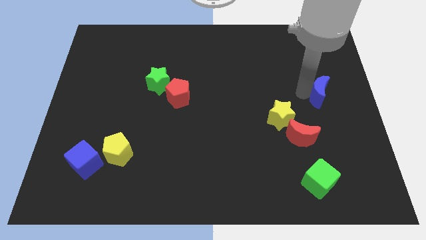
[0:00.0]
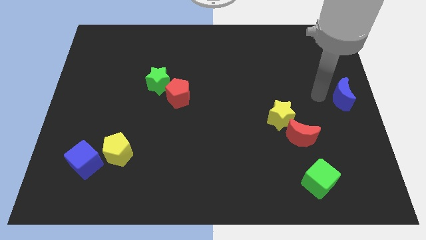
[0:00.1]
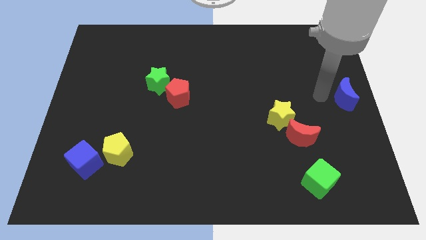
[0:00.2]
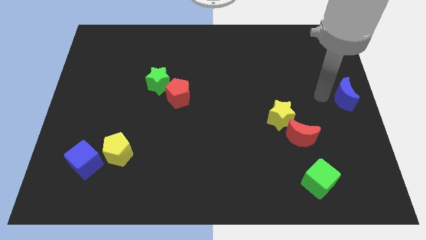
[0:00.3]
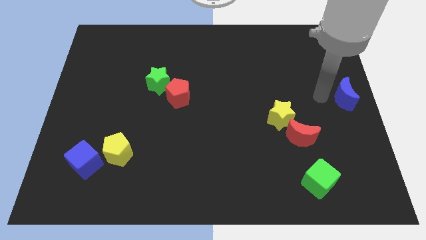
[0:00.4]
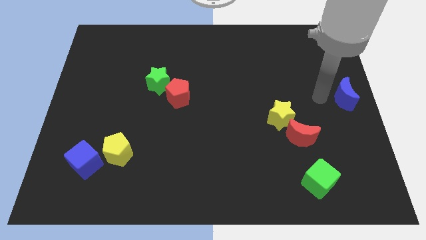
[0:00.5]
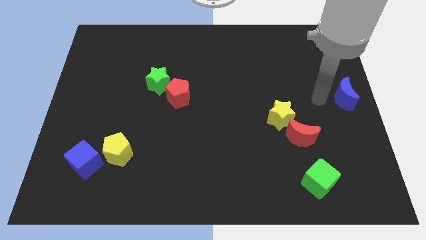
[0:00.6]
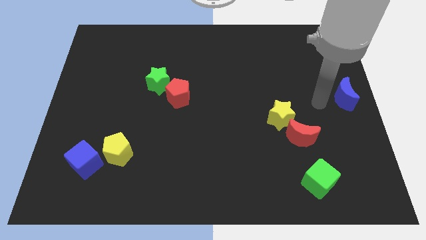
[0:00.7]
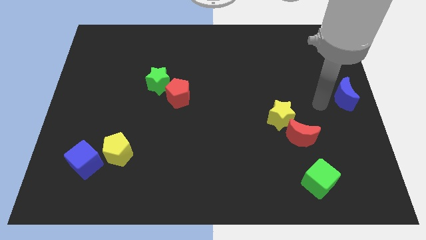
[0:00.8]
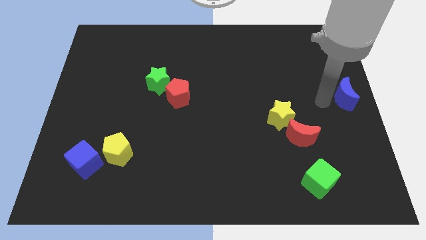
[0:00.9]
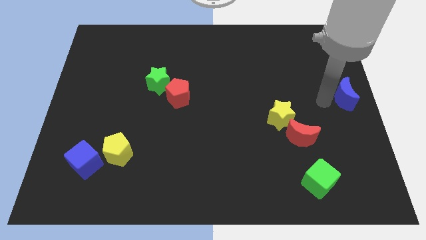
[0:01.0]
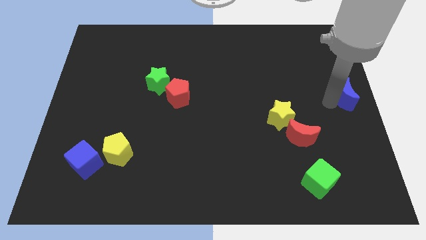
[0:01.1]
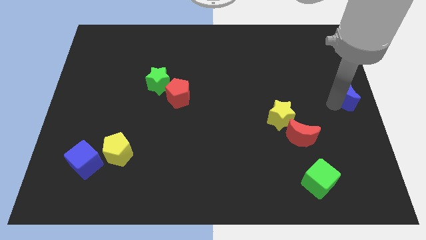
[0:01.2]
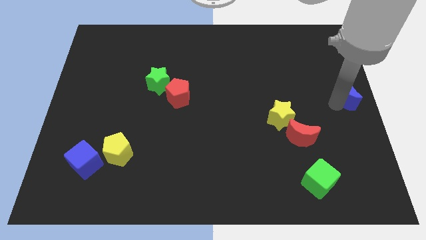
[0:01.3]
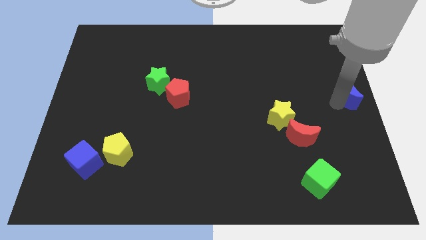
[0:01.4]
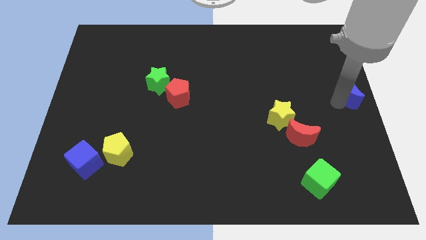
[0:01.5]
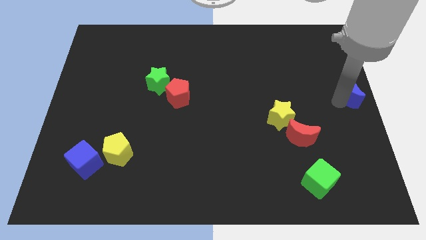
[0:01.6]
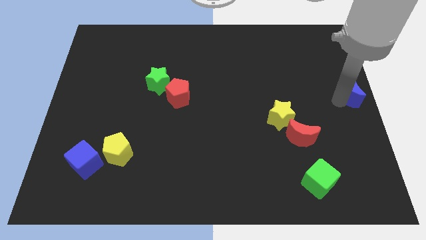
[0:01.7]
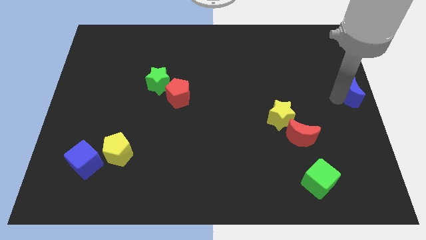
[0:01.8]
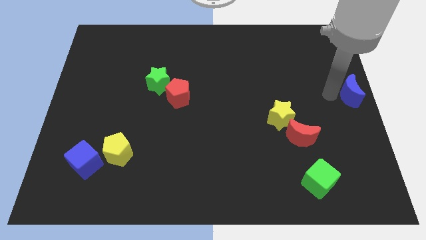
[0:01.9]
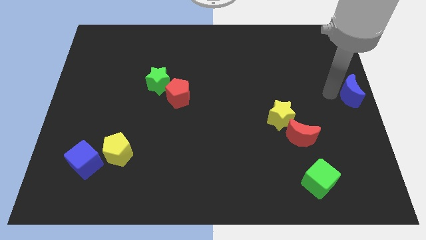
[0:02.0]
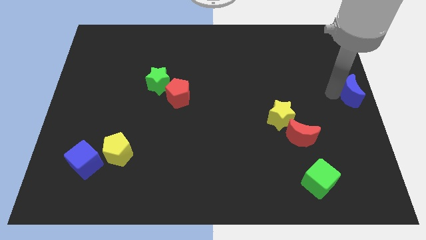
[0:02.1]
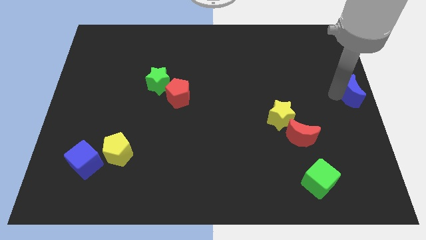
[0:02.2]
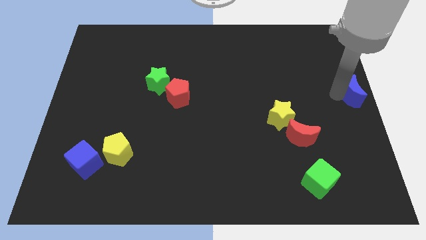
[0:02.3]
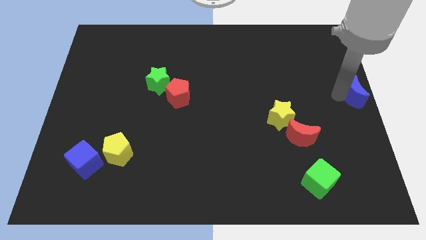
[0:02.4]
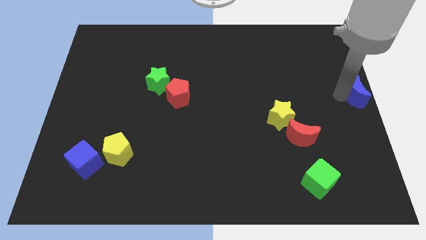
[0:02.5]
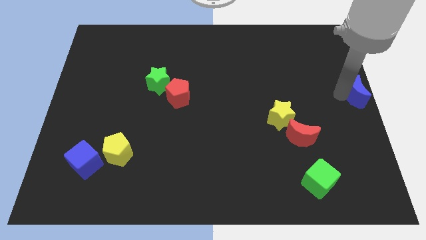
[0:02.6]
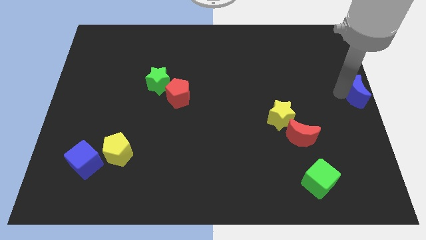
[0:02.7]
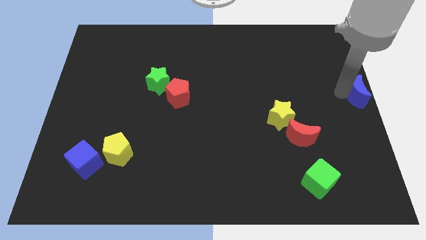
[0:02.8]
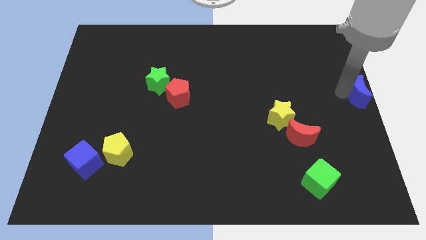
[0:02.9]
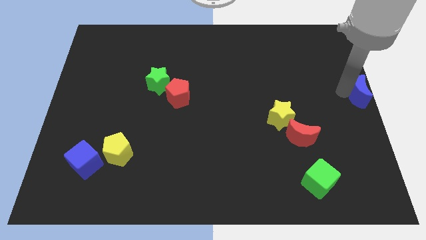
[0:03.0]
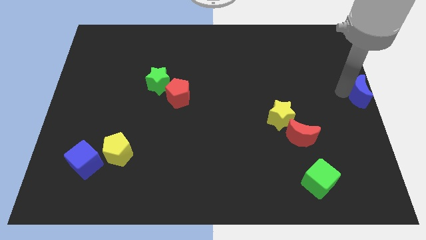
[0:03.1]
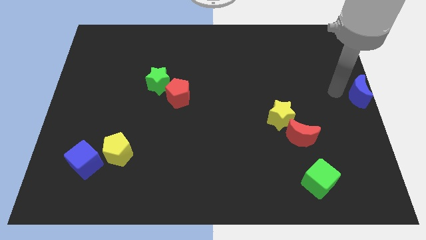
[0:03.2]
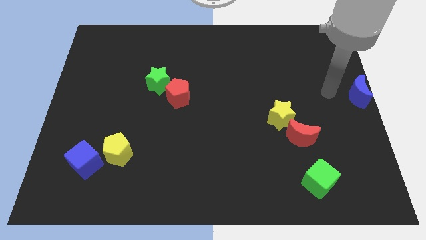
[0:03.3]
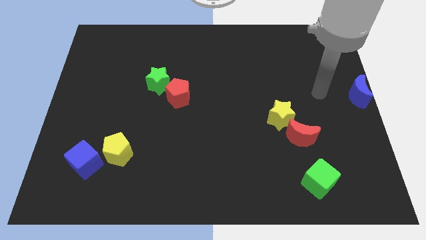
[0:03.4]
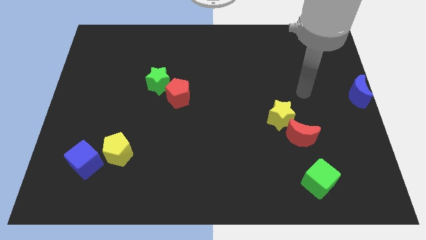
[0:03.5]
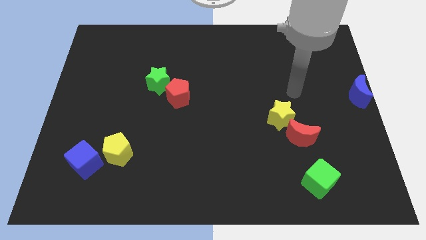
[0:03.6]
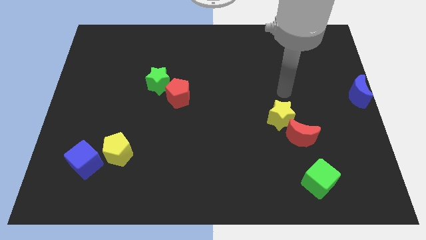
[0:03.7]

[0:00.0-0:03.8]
move the blue moon to the right center of the board

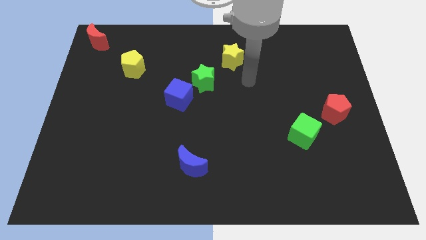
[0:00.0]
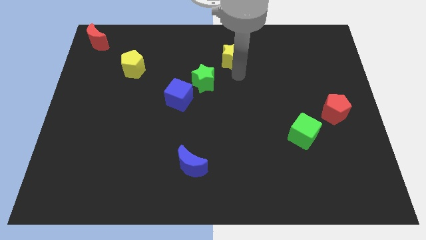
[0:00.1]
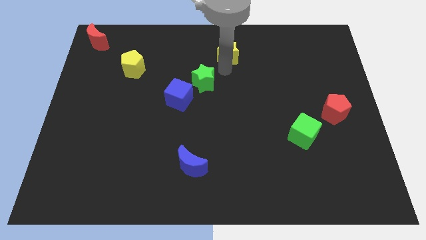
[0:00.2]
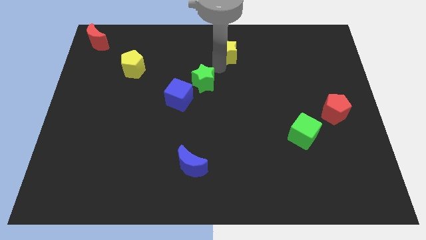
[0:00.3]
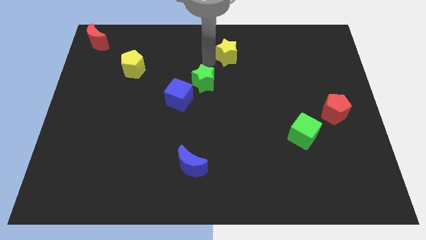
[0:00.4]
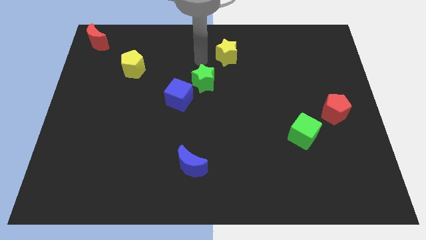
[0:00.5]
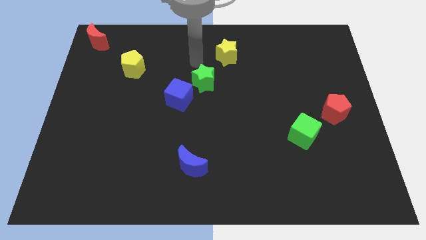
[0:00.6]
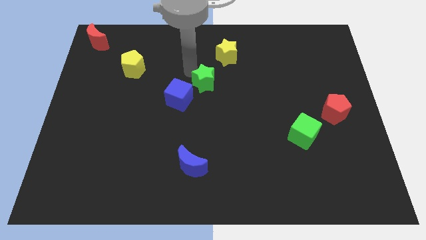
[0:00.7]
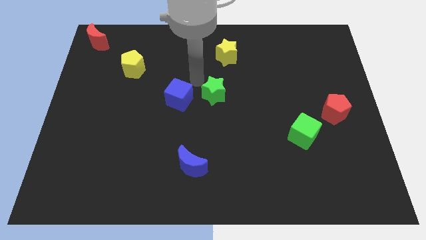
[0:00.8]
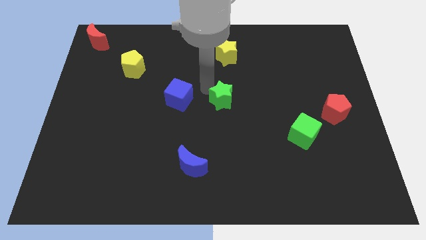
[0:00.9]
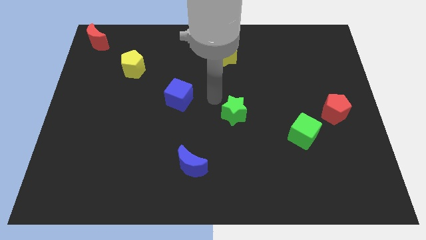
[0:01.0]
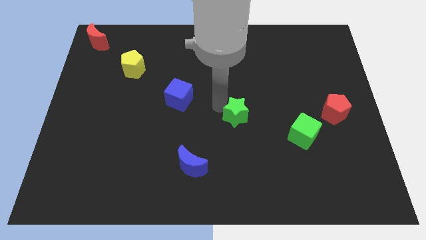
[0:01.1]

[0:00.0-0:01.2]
move the green star diagonally between the green cube and blue

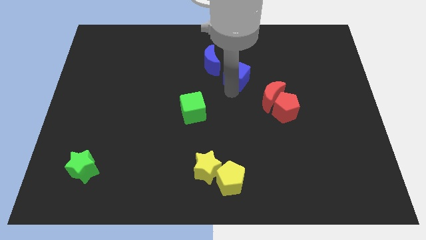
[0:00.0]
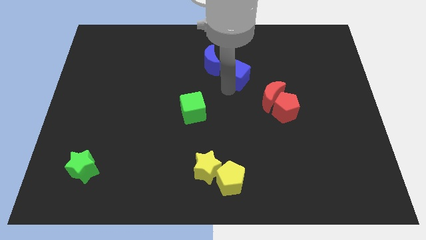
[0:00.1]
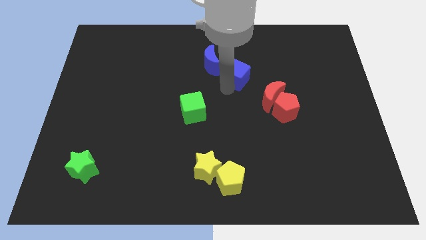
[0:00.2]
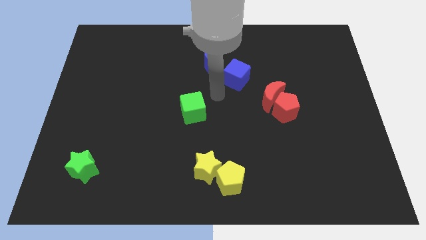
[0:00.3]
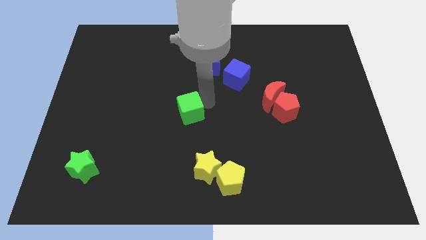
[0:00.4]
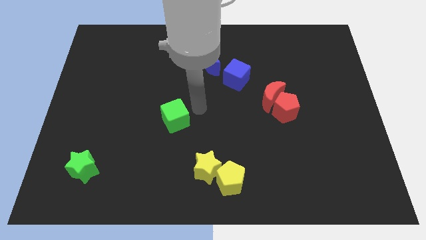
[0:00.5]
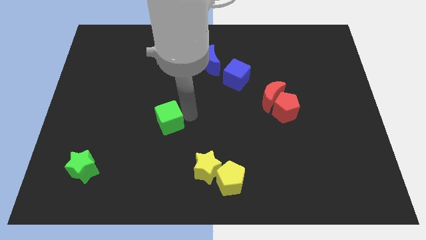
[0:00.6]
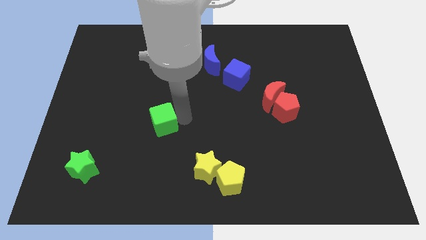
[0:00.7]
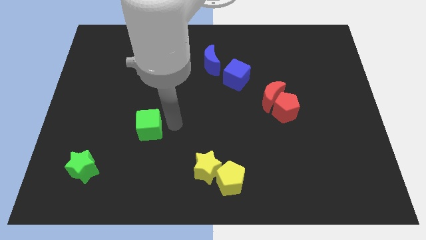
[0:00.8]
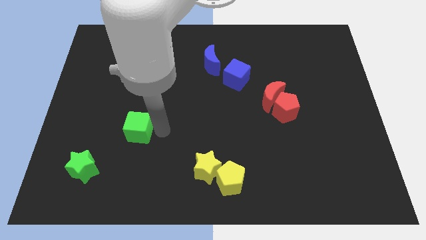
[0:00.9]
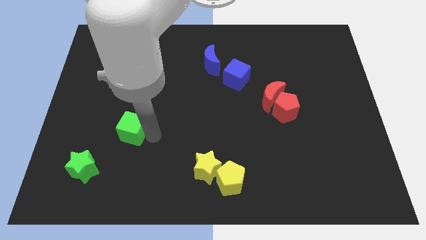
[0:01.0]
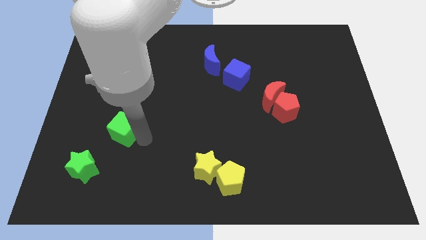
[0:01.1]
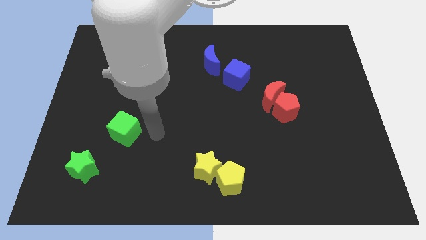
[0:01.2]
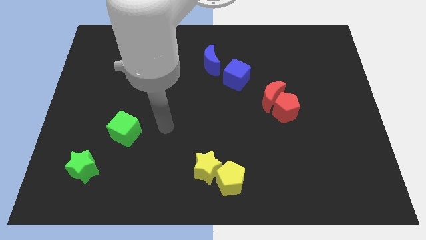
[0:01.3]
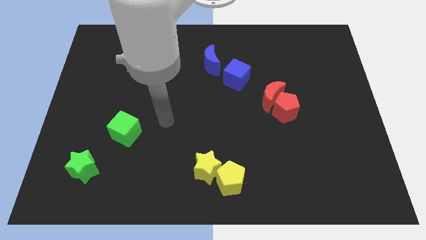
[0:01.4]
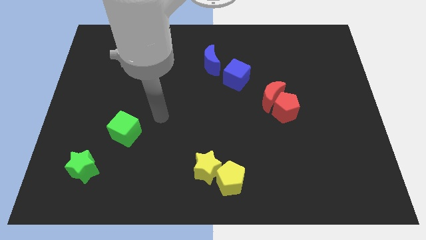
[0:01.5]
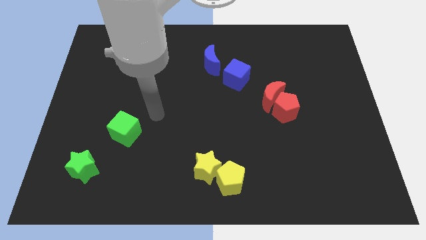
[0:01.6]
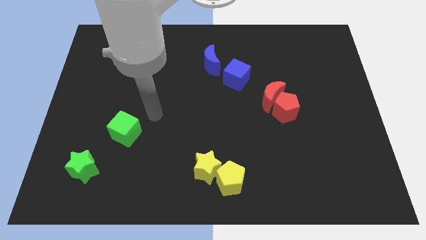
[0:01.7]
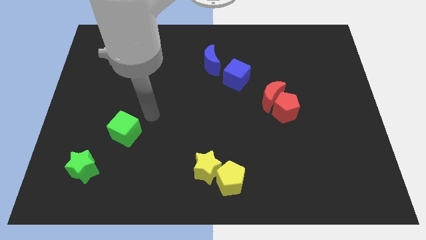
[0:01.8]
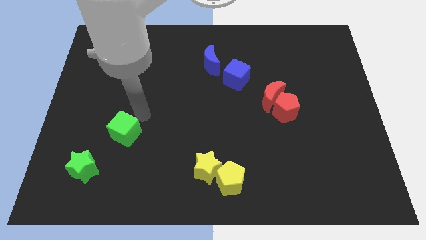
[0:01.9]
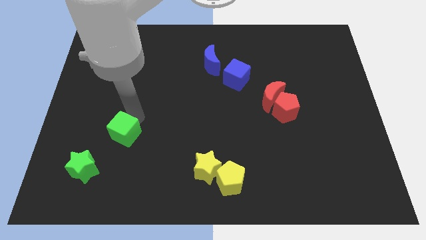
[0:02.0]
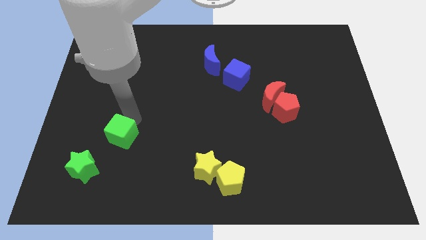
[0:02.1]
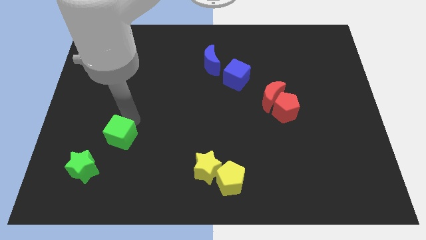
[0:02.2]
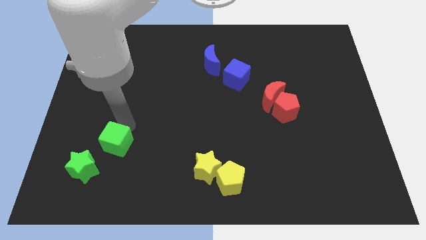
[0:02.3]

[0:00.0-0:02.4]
push the green cube towards the green star

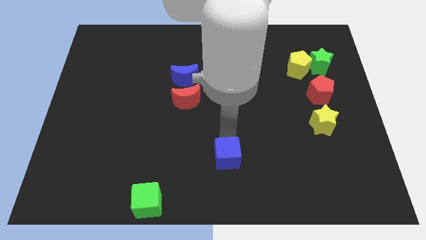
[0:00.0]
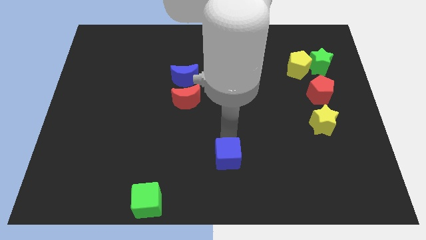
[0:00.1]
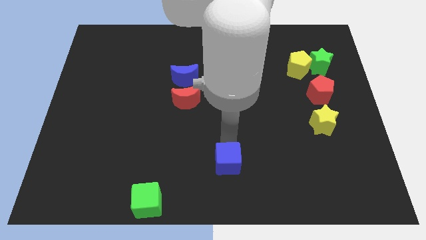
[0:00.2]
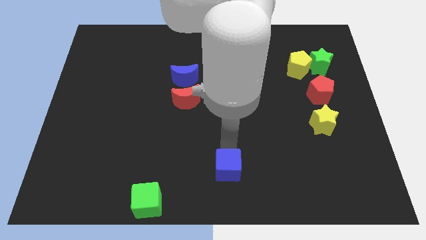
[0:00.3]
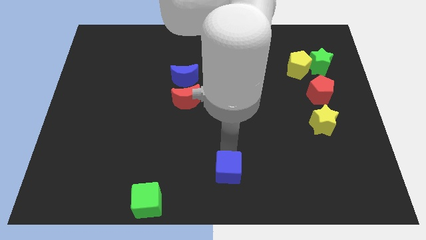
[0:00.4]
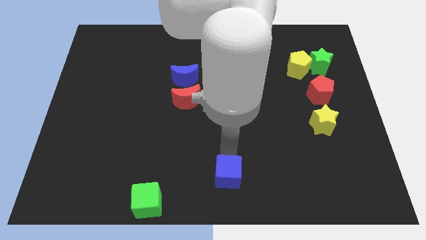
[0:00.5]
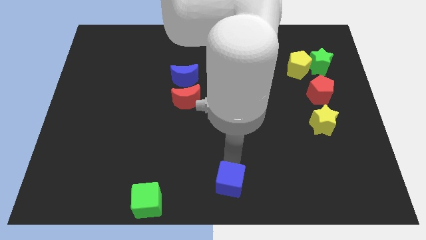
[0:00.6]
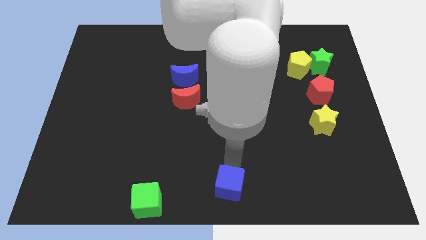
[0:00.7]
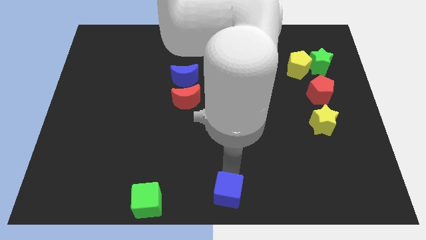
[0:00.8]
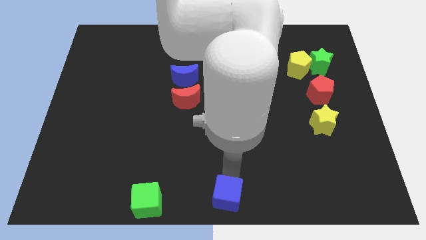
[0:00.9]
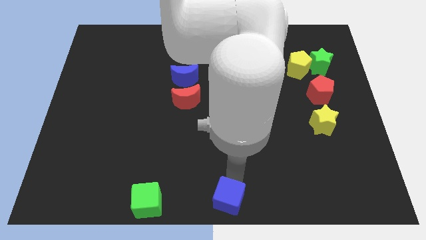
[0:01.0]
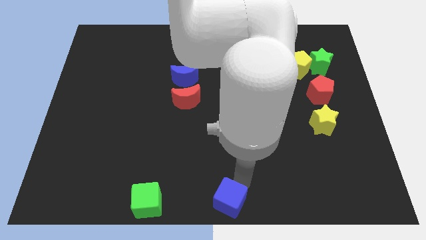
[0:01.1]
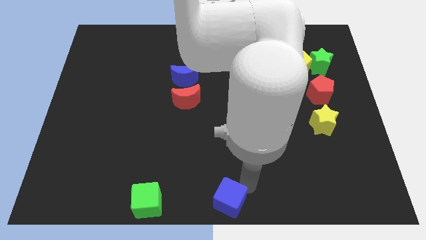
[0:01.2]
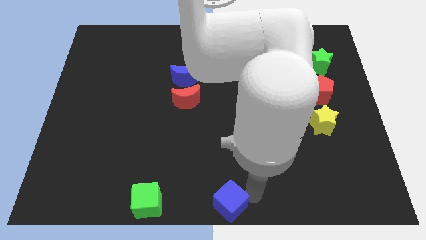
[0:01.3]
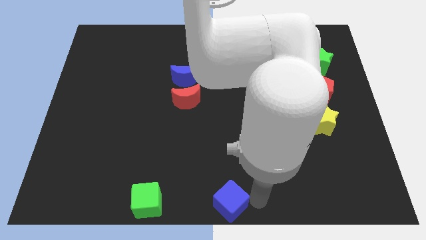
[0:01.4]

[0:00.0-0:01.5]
move the blue cube to the right of the green cube

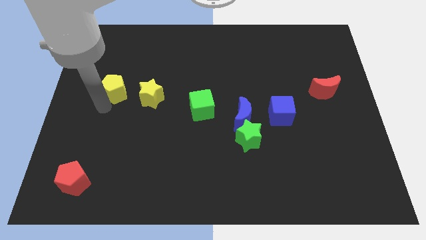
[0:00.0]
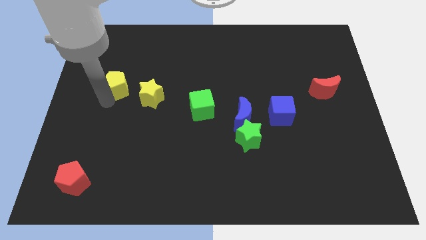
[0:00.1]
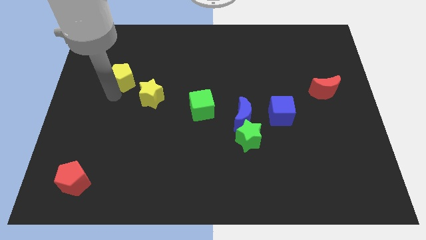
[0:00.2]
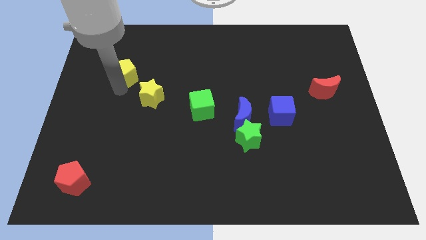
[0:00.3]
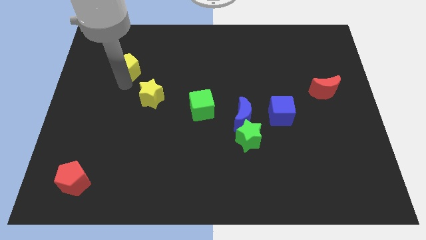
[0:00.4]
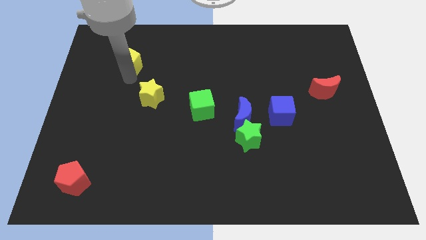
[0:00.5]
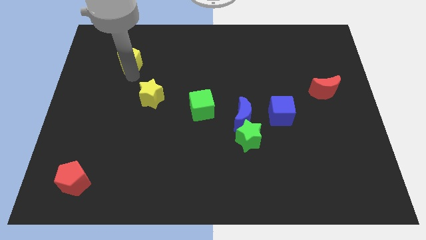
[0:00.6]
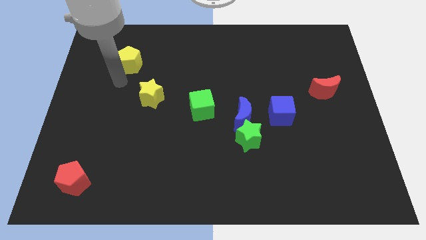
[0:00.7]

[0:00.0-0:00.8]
move the yellow pentagon parallel to yellow star
